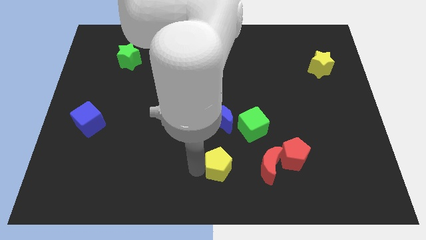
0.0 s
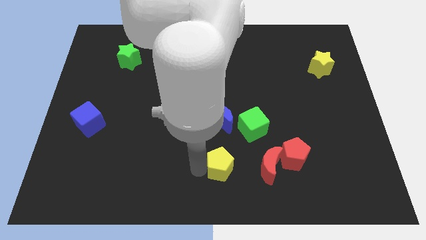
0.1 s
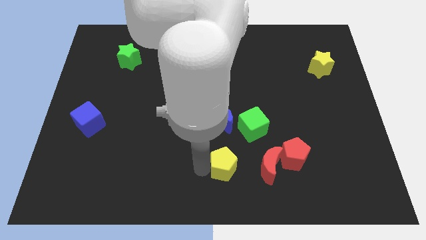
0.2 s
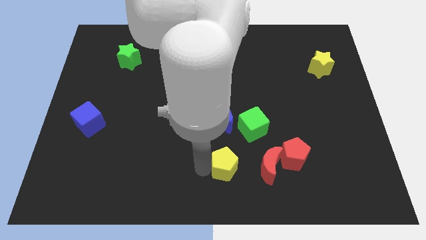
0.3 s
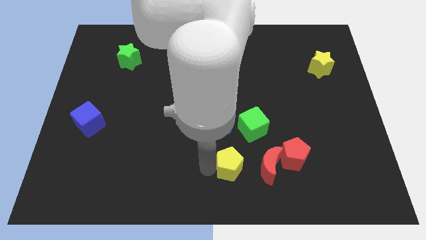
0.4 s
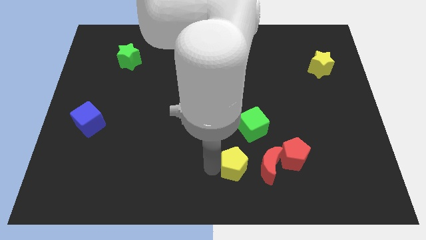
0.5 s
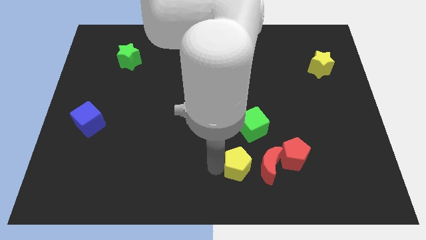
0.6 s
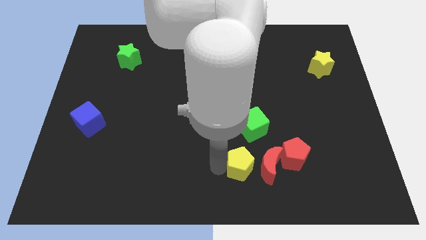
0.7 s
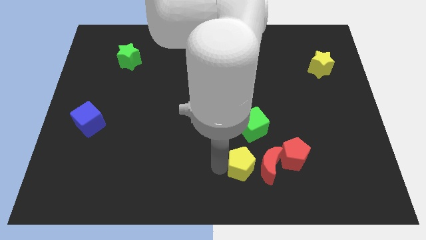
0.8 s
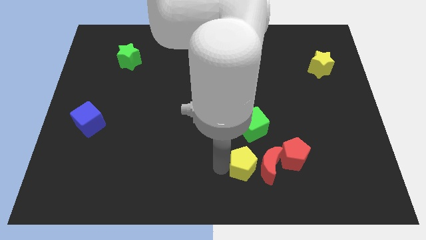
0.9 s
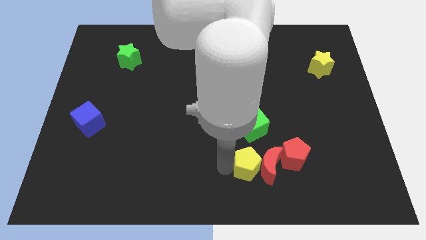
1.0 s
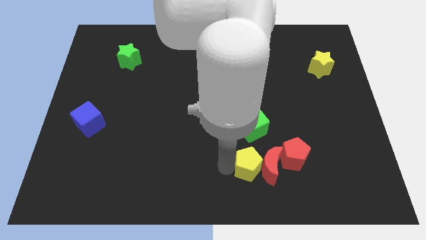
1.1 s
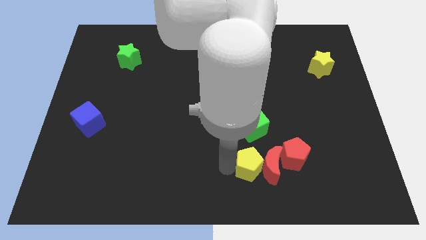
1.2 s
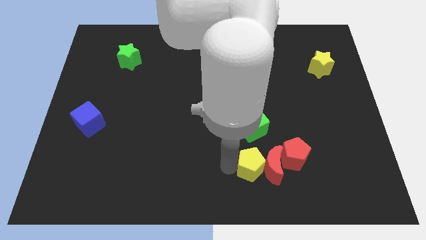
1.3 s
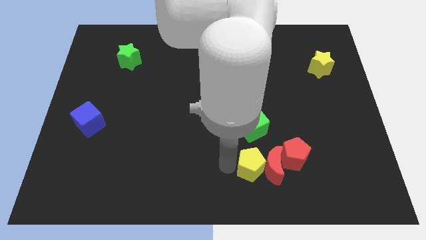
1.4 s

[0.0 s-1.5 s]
push the yellow pentagon into the red crescent

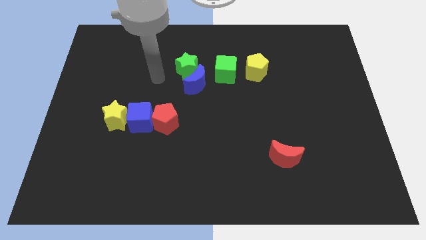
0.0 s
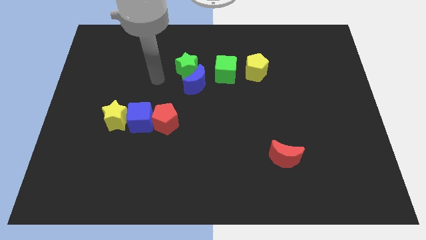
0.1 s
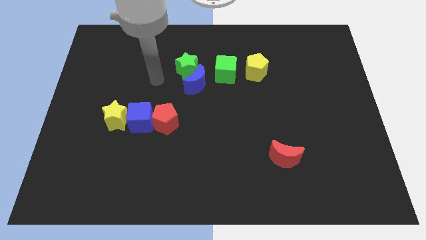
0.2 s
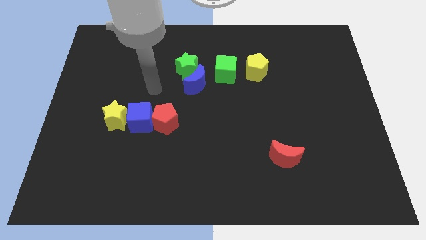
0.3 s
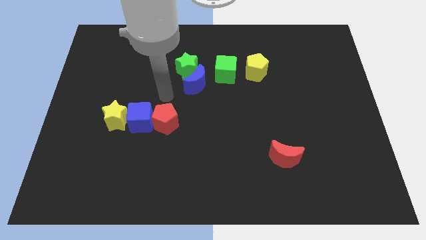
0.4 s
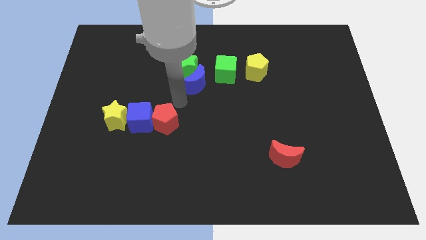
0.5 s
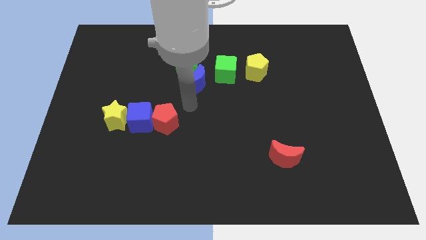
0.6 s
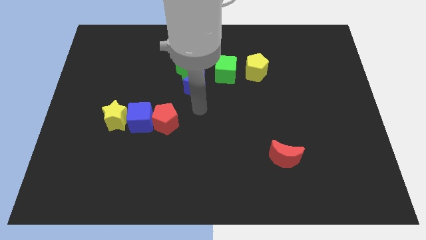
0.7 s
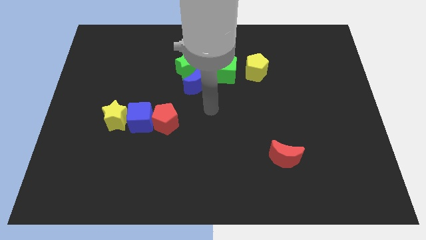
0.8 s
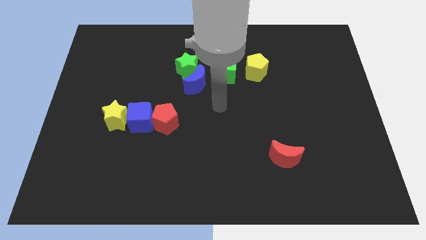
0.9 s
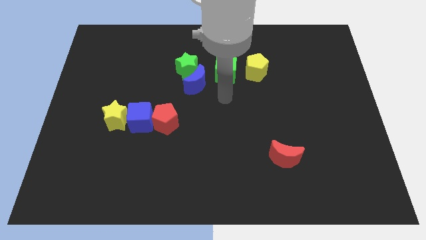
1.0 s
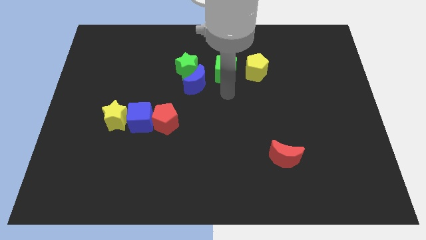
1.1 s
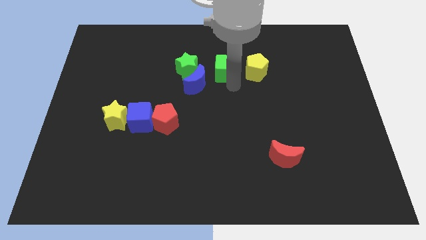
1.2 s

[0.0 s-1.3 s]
move your arm to the bottom side of the green cube

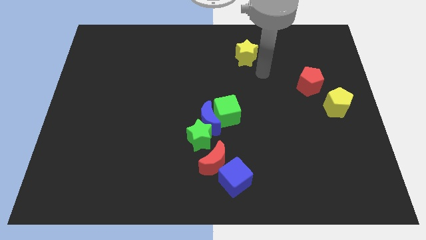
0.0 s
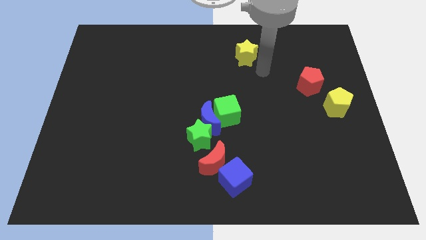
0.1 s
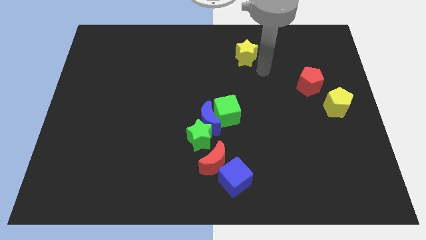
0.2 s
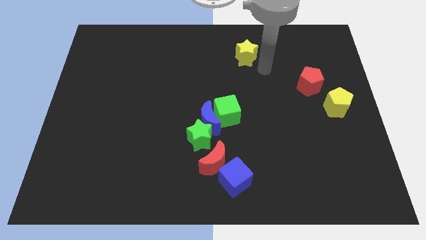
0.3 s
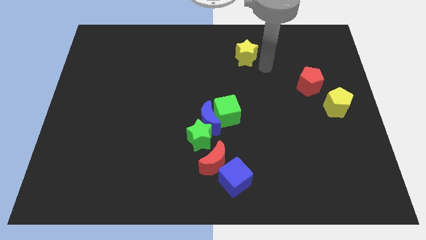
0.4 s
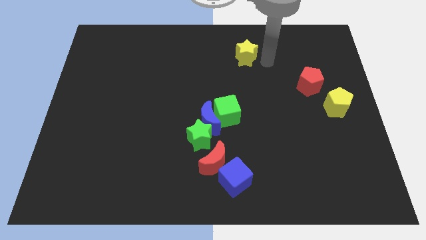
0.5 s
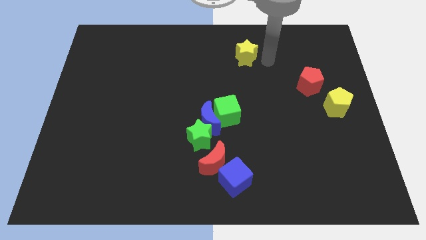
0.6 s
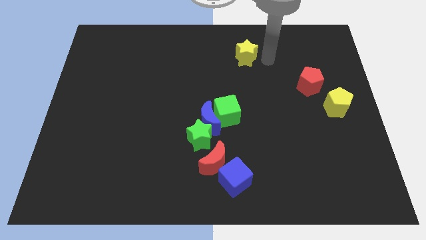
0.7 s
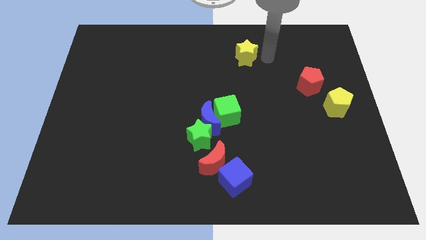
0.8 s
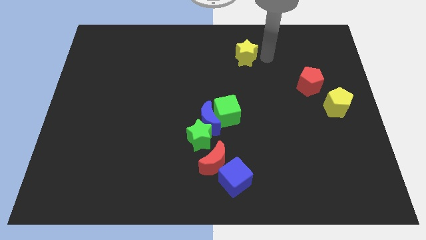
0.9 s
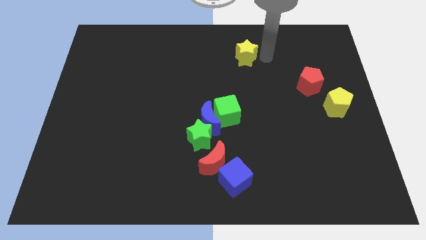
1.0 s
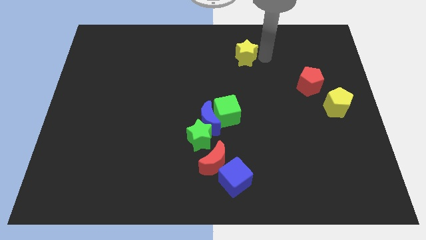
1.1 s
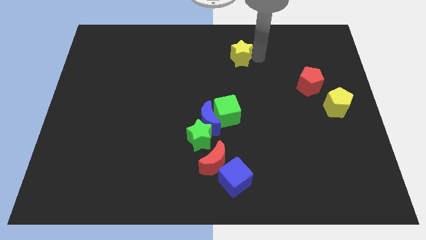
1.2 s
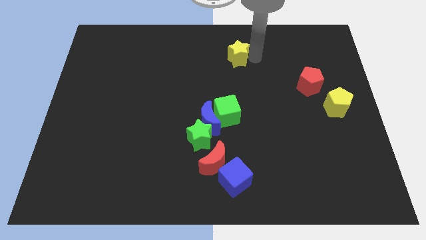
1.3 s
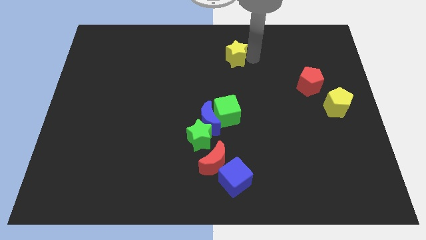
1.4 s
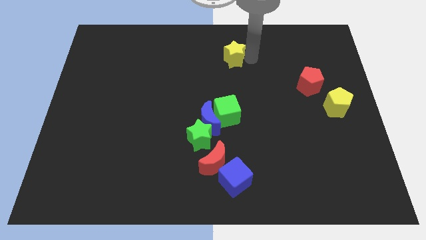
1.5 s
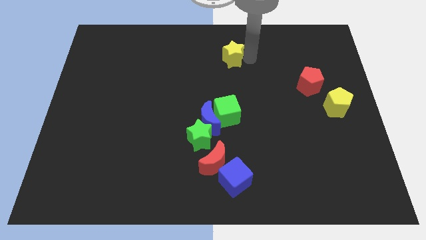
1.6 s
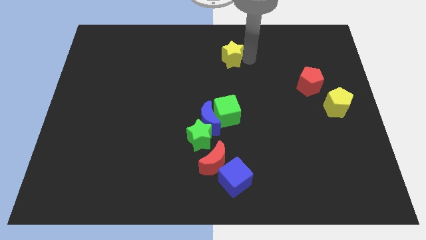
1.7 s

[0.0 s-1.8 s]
point your arm close to yellow star

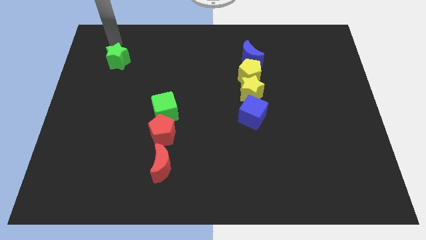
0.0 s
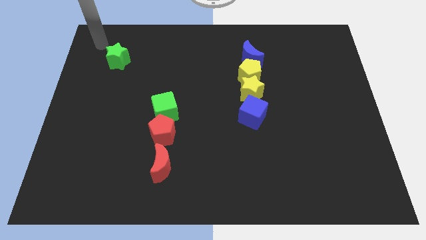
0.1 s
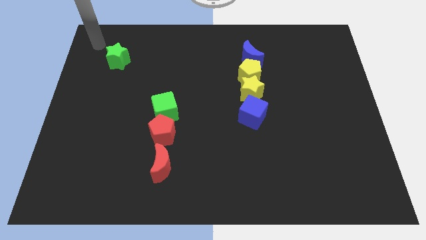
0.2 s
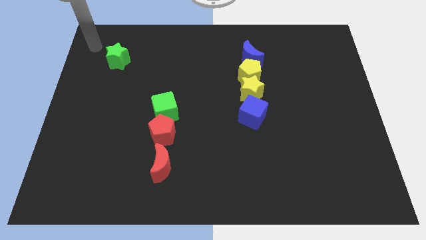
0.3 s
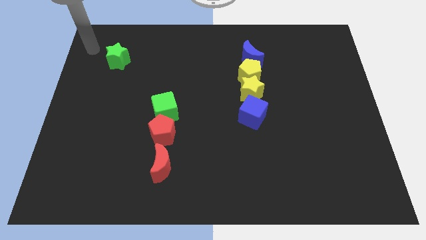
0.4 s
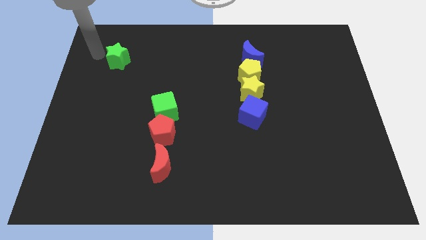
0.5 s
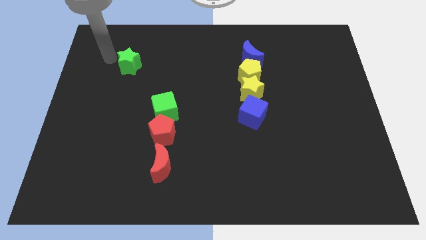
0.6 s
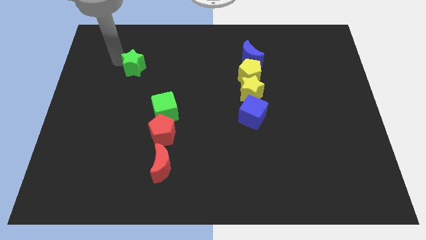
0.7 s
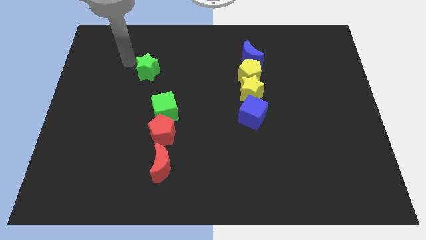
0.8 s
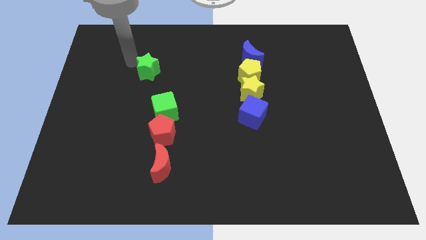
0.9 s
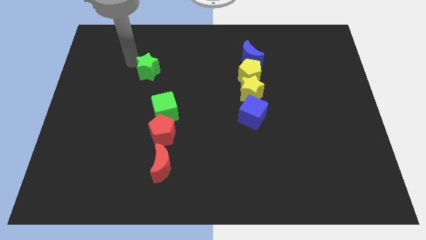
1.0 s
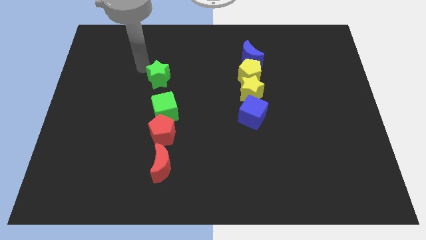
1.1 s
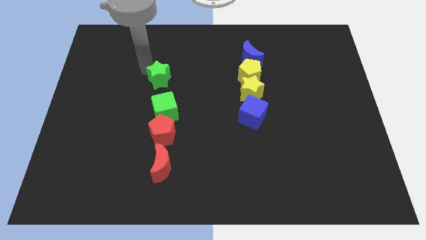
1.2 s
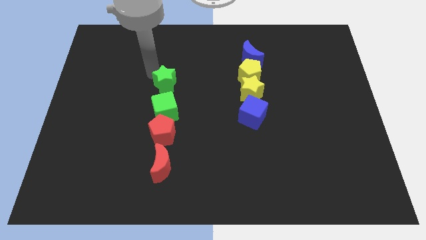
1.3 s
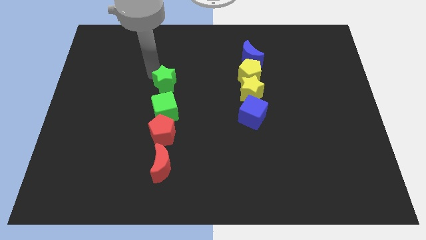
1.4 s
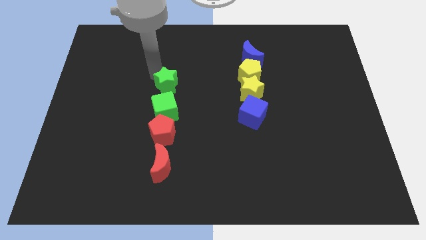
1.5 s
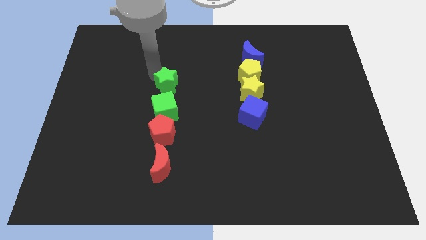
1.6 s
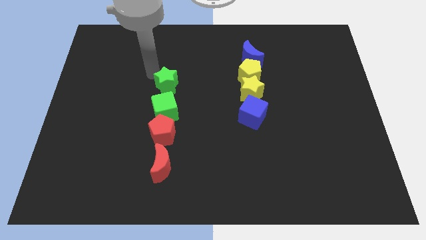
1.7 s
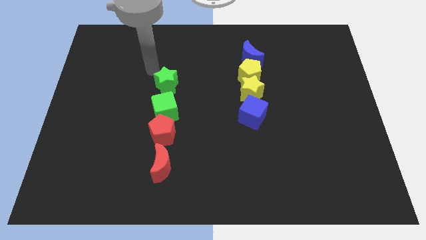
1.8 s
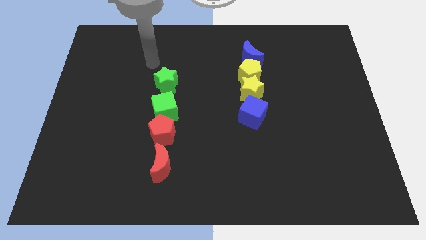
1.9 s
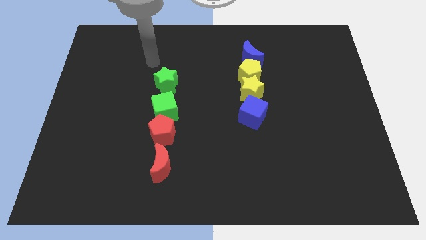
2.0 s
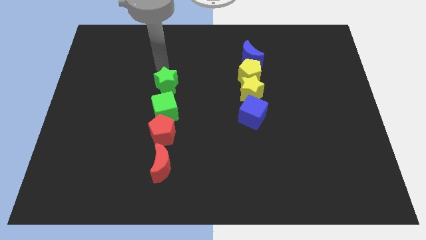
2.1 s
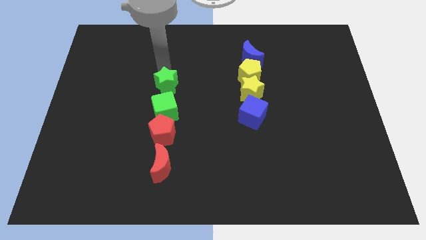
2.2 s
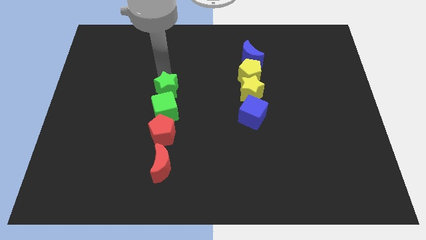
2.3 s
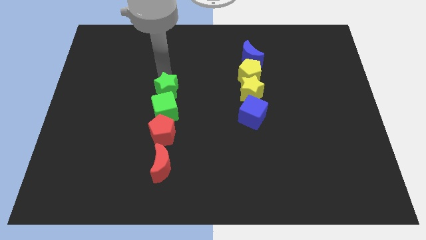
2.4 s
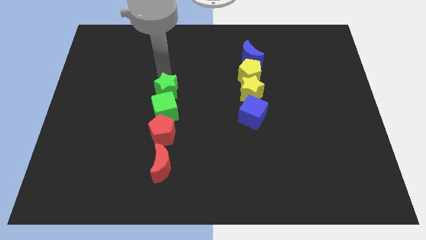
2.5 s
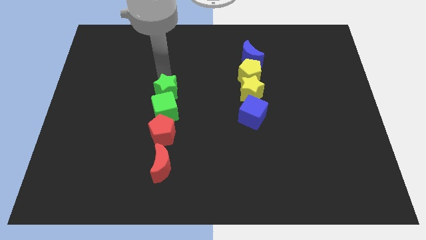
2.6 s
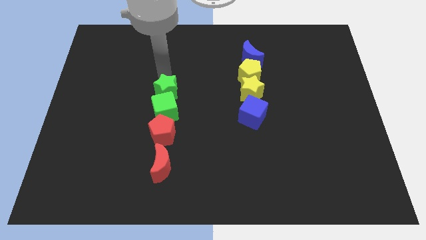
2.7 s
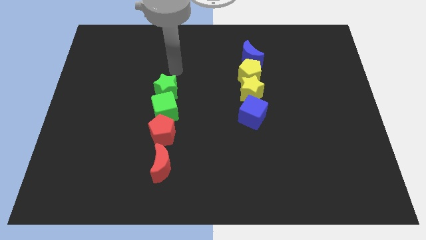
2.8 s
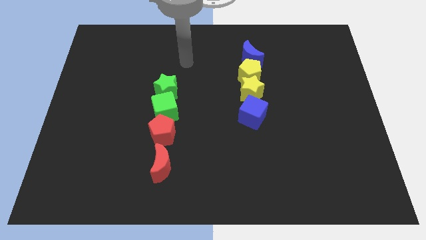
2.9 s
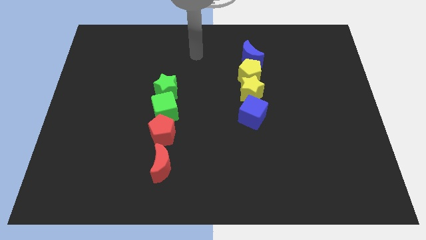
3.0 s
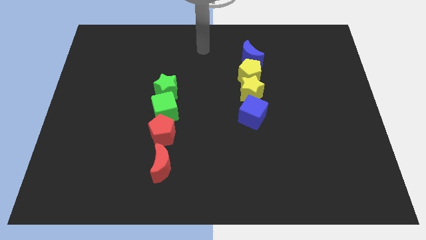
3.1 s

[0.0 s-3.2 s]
place green star to the top of the green cube

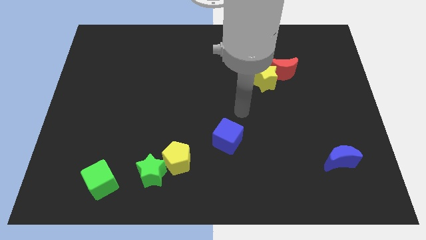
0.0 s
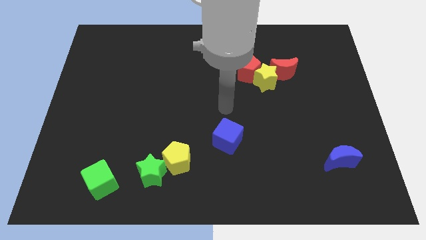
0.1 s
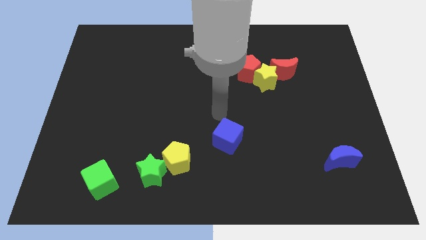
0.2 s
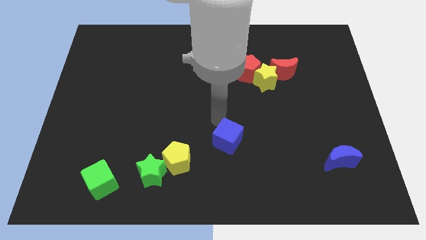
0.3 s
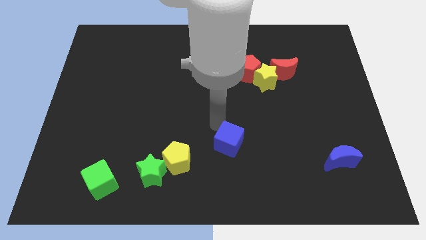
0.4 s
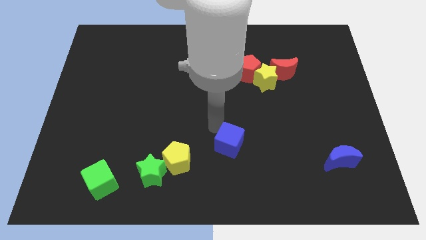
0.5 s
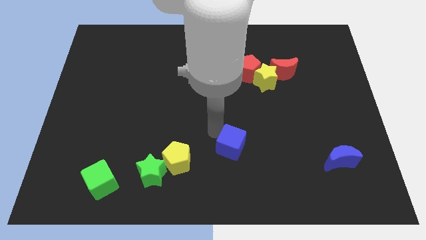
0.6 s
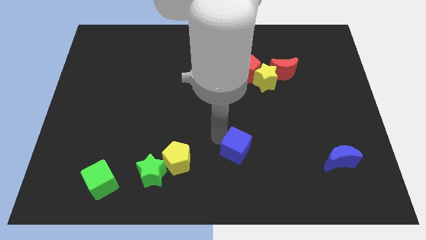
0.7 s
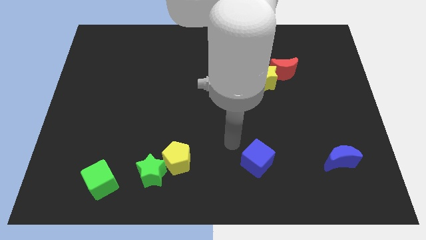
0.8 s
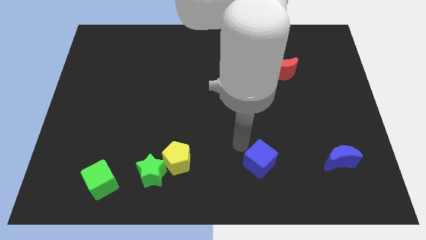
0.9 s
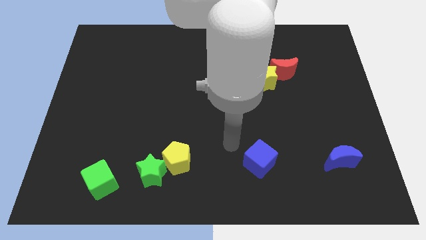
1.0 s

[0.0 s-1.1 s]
push the blue cube to the right of the yellow pentagon
